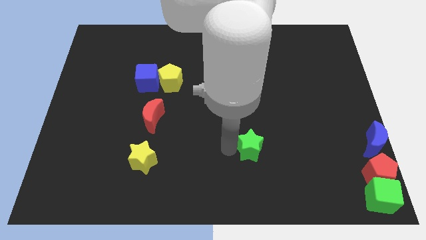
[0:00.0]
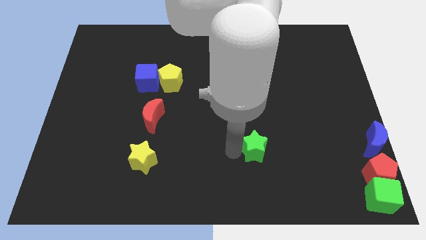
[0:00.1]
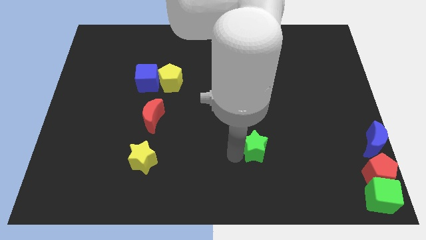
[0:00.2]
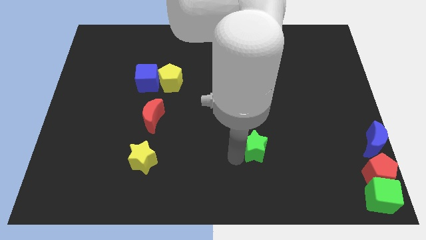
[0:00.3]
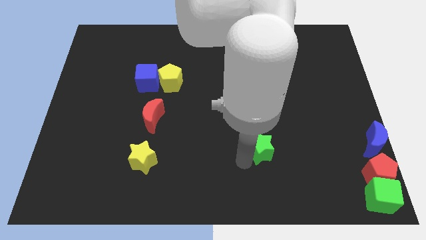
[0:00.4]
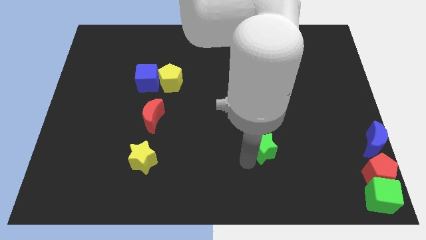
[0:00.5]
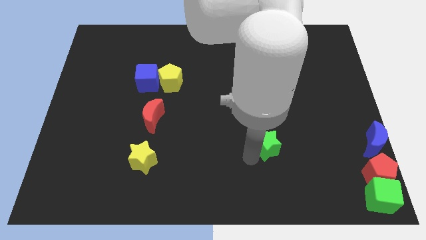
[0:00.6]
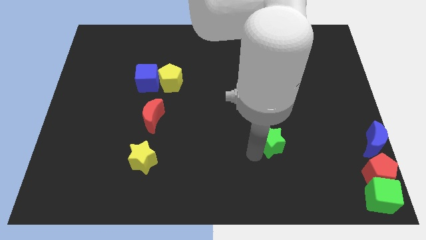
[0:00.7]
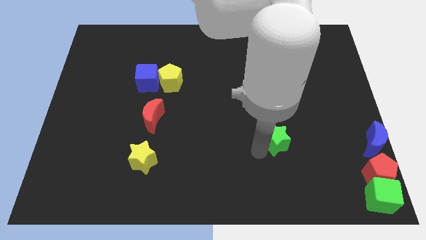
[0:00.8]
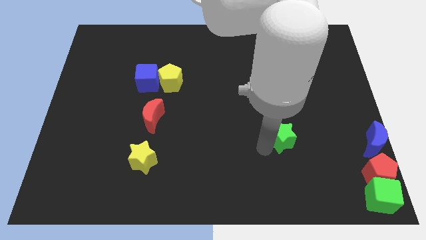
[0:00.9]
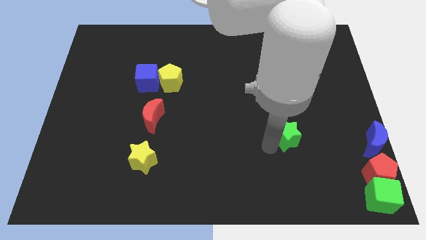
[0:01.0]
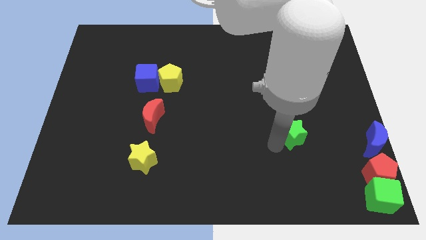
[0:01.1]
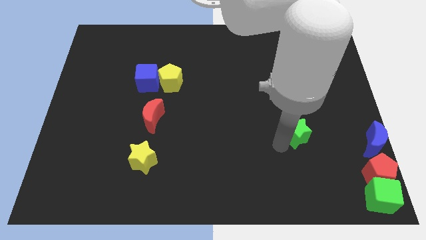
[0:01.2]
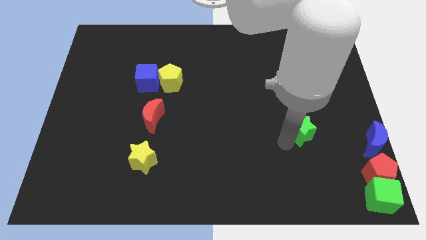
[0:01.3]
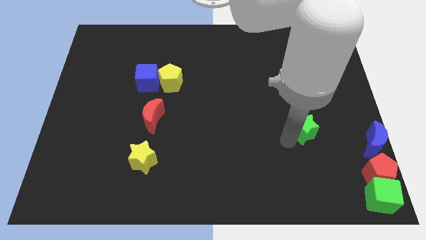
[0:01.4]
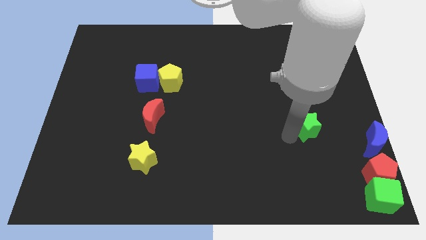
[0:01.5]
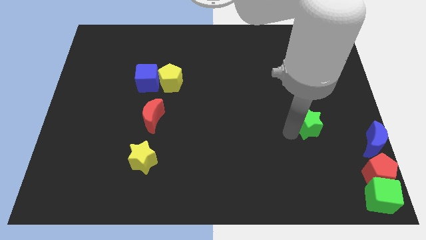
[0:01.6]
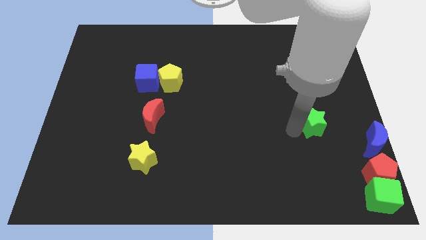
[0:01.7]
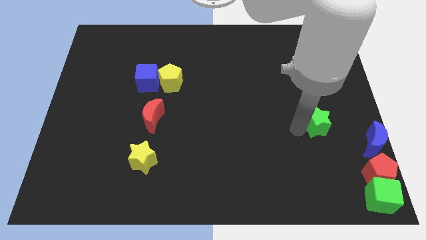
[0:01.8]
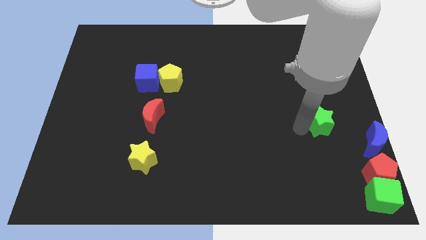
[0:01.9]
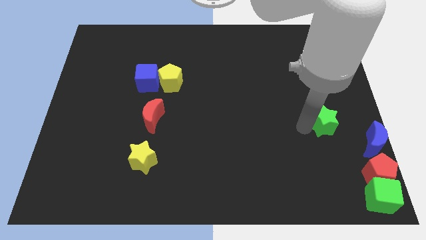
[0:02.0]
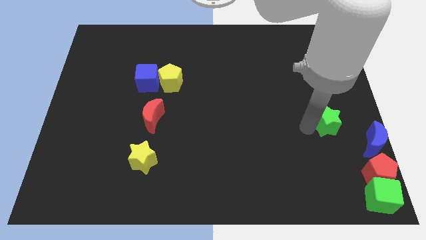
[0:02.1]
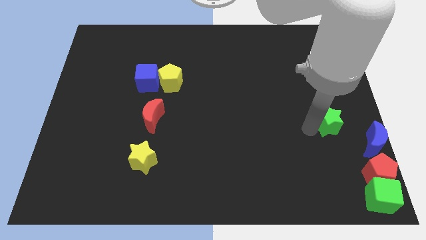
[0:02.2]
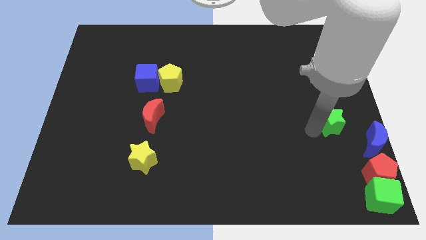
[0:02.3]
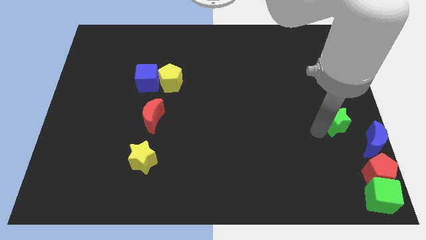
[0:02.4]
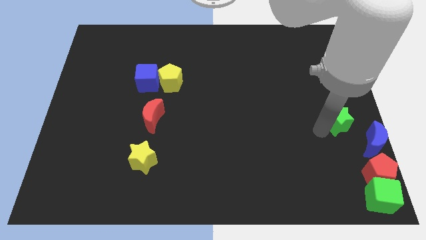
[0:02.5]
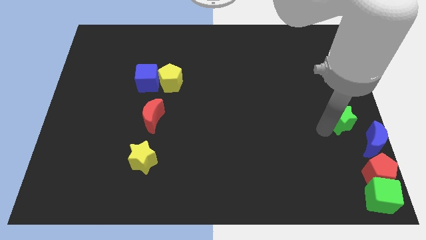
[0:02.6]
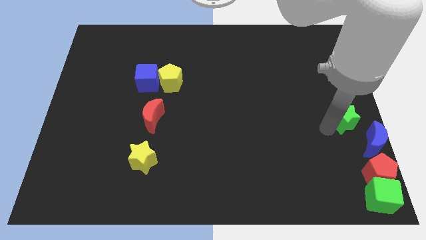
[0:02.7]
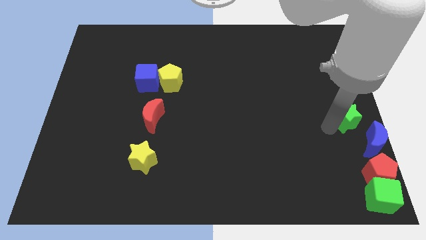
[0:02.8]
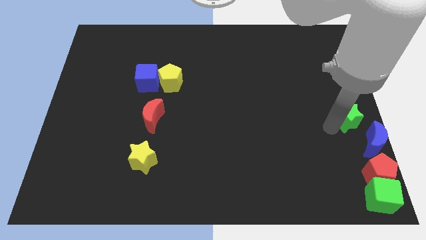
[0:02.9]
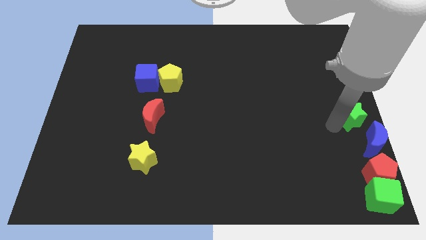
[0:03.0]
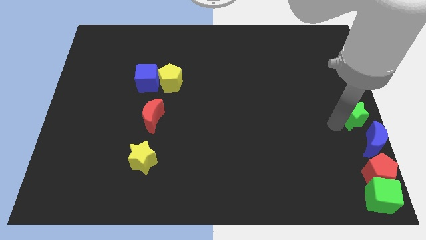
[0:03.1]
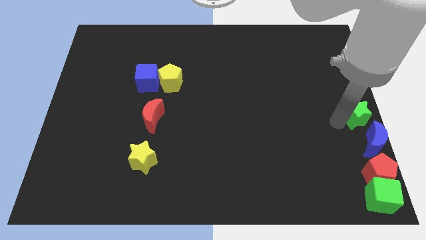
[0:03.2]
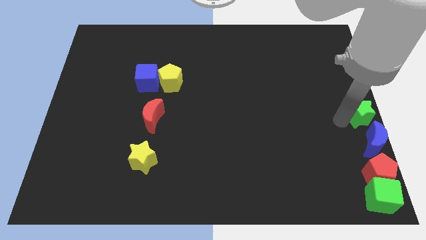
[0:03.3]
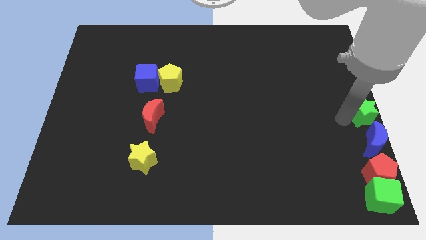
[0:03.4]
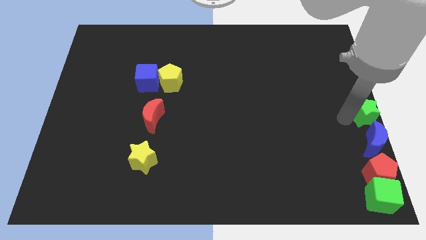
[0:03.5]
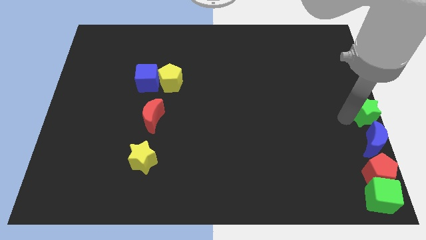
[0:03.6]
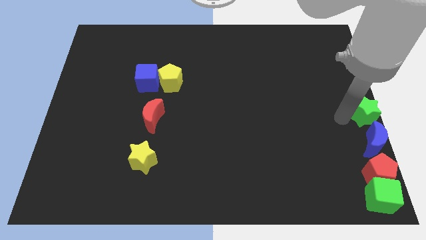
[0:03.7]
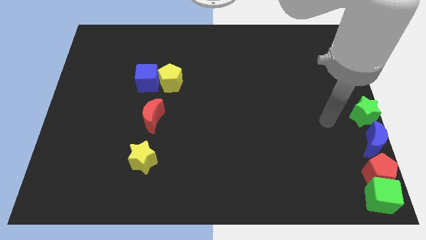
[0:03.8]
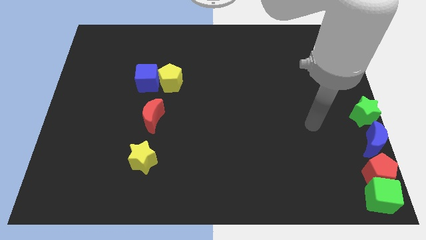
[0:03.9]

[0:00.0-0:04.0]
move green star to the top of blue crescent

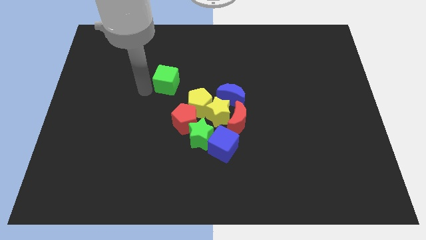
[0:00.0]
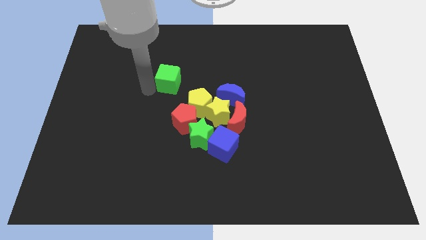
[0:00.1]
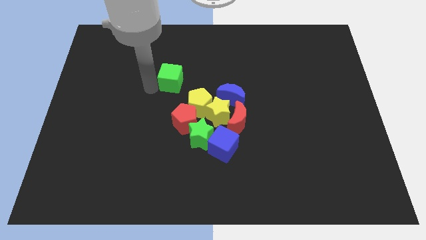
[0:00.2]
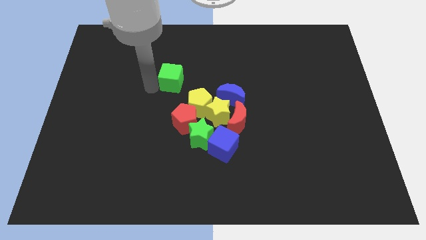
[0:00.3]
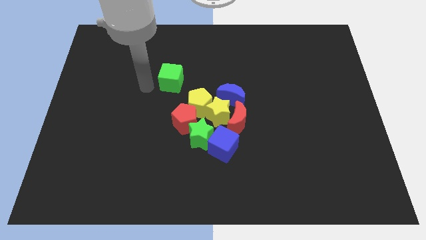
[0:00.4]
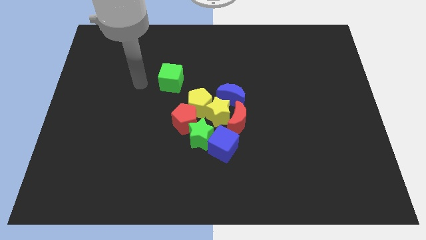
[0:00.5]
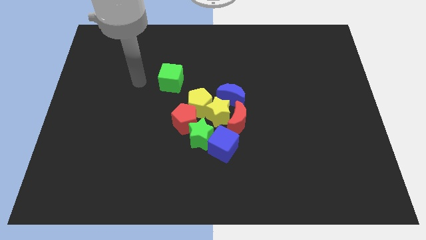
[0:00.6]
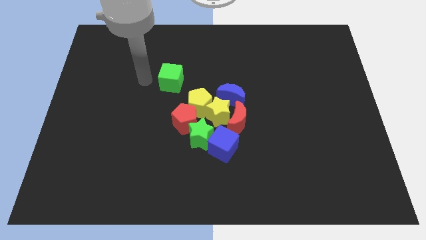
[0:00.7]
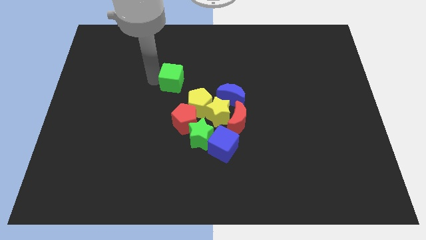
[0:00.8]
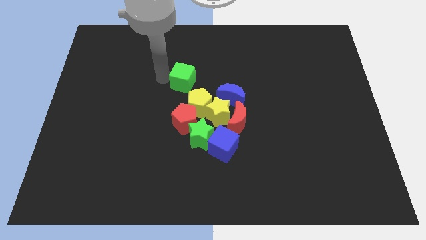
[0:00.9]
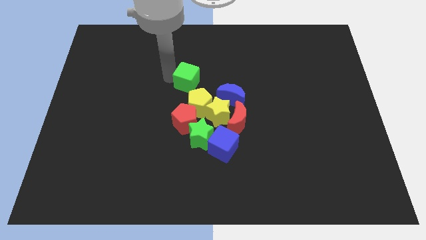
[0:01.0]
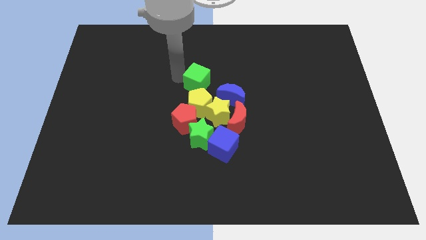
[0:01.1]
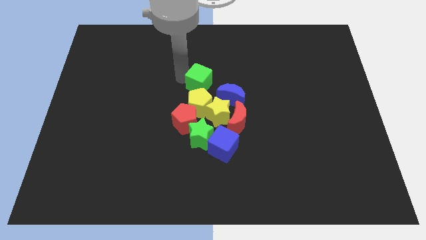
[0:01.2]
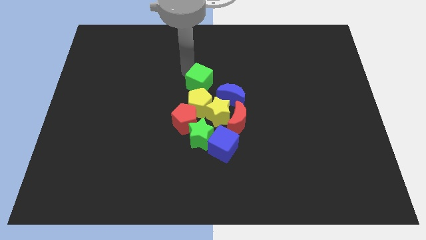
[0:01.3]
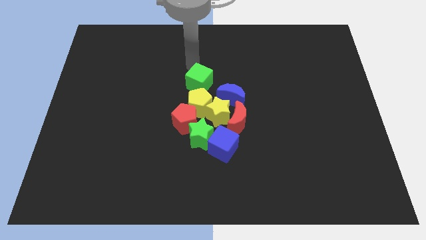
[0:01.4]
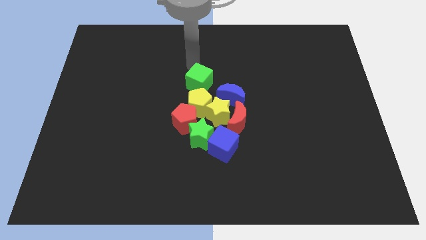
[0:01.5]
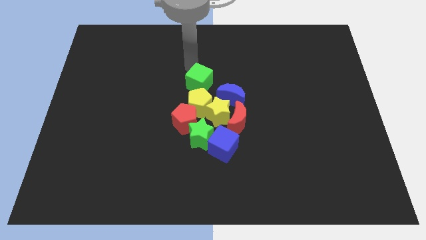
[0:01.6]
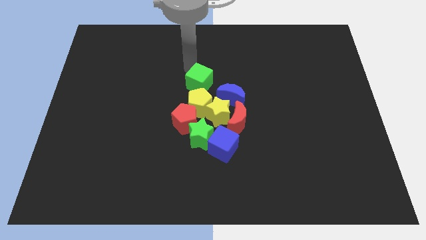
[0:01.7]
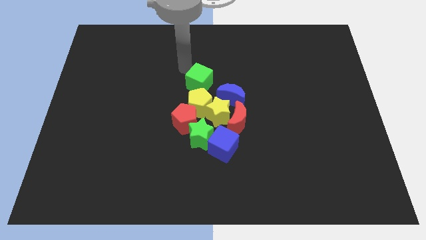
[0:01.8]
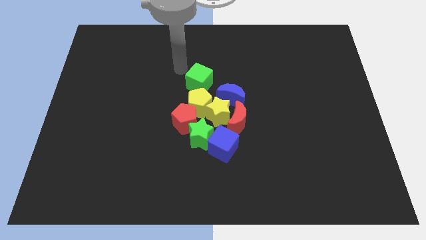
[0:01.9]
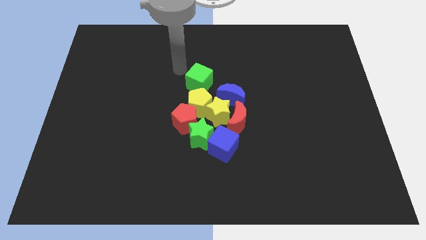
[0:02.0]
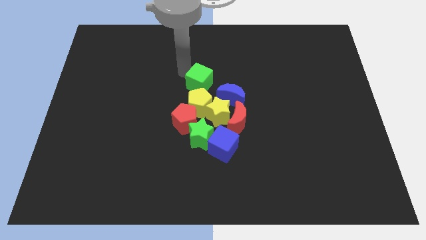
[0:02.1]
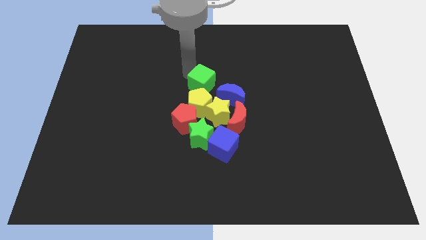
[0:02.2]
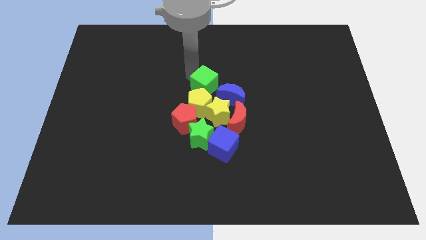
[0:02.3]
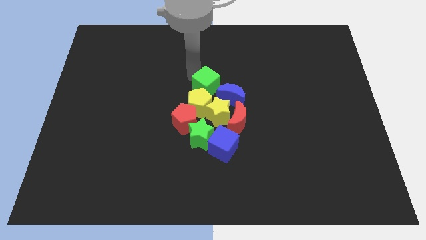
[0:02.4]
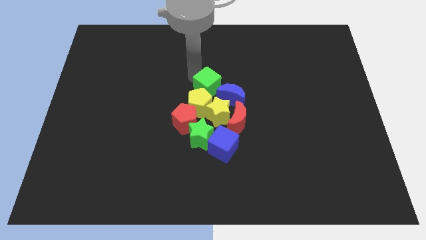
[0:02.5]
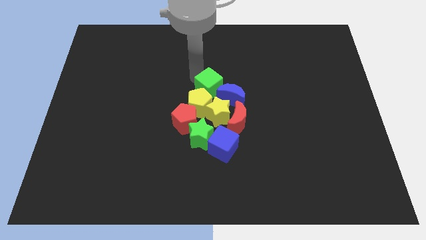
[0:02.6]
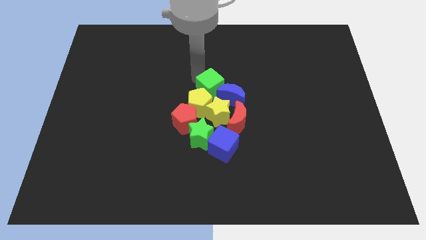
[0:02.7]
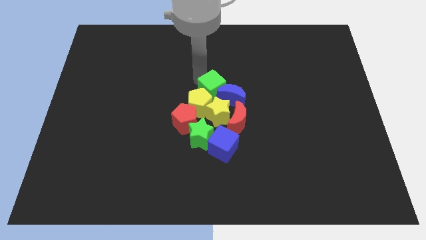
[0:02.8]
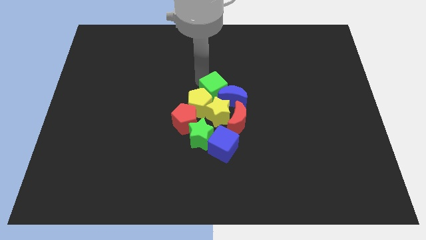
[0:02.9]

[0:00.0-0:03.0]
push the green cube into a group of blocks

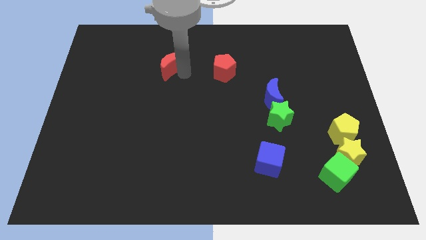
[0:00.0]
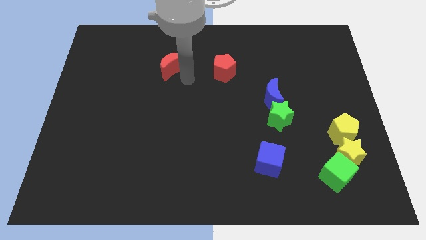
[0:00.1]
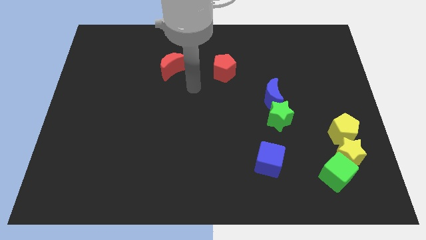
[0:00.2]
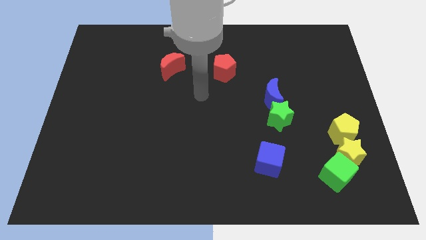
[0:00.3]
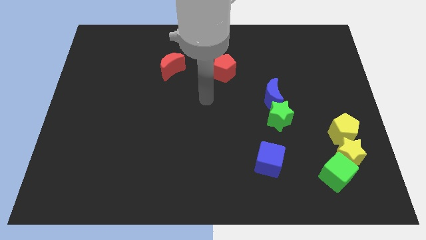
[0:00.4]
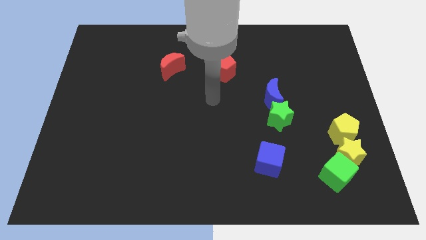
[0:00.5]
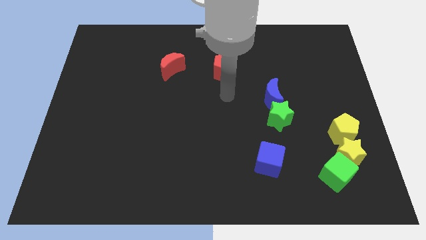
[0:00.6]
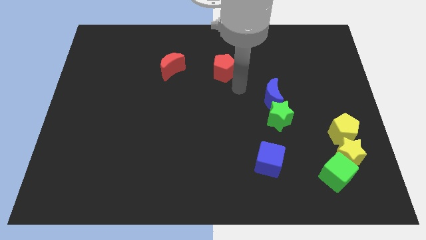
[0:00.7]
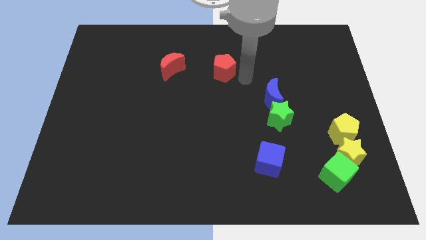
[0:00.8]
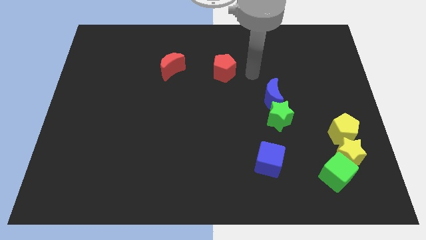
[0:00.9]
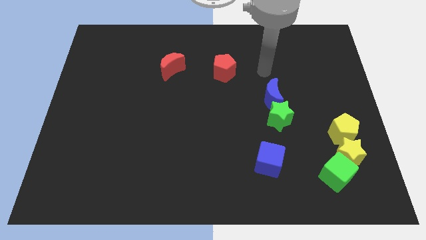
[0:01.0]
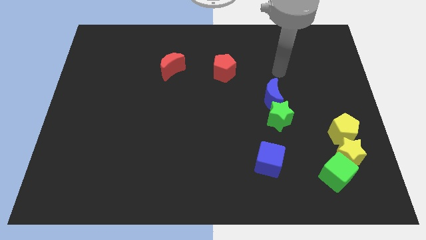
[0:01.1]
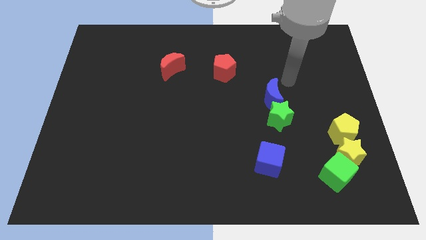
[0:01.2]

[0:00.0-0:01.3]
move your arm to the top of blue crescent

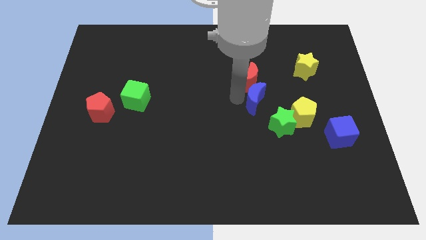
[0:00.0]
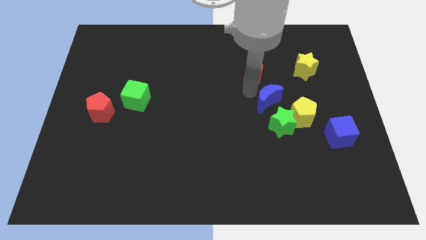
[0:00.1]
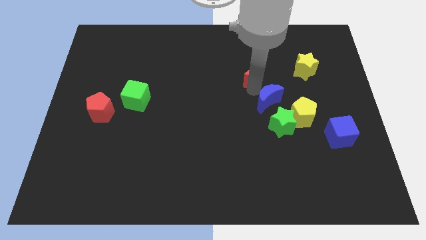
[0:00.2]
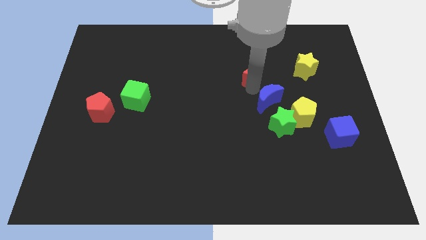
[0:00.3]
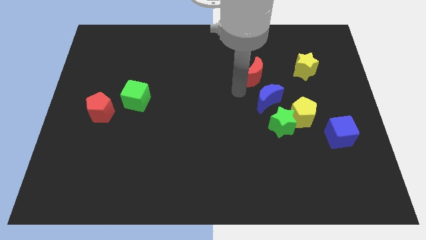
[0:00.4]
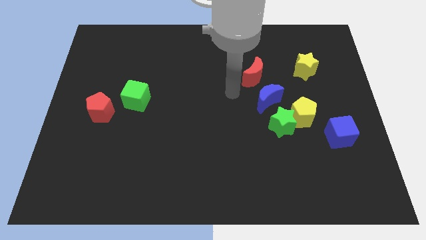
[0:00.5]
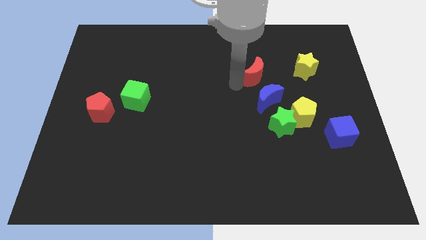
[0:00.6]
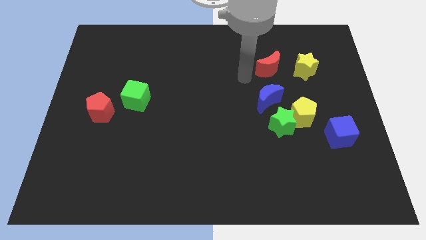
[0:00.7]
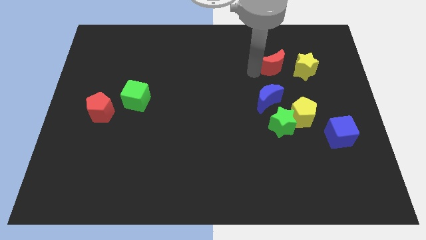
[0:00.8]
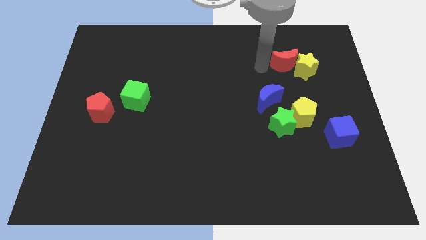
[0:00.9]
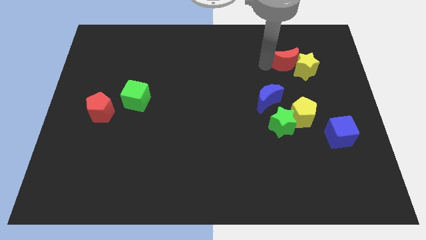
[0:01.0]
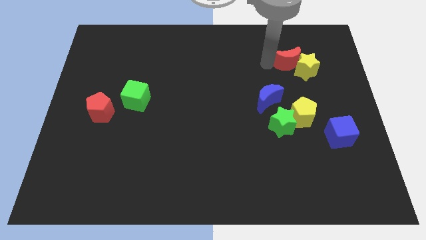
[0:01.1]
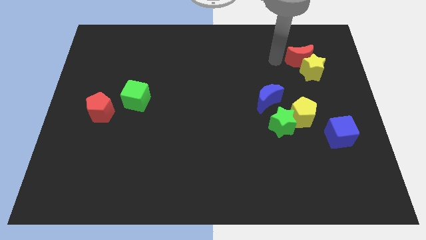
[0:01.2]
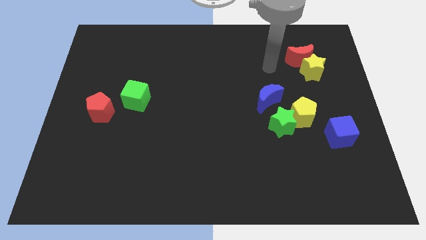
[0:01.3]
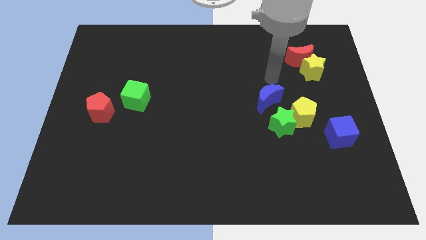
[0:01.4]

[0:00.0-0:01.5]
move the red moon into the yellow star
